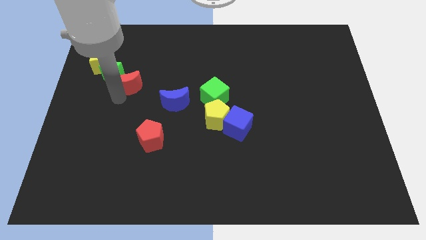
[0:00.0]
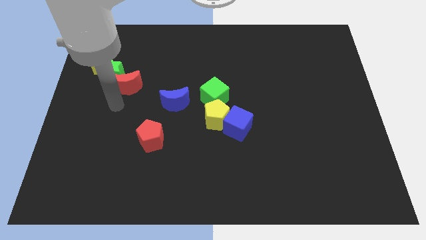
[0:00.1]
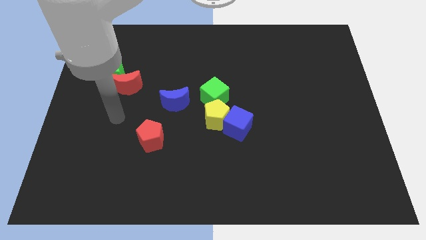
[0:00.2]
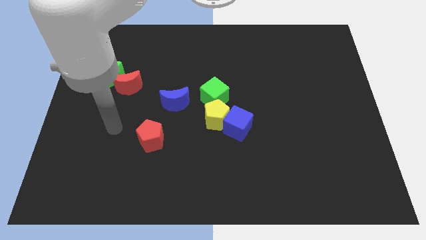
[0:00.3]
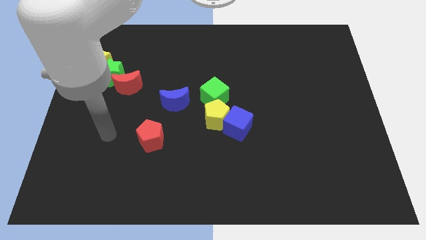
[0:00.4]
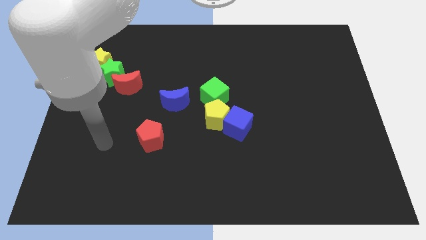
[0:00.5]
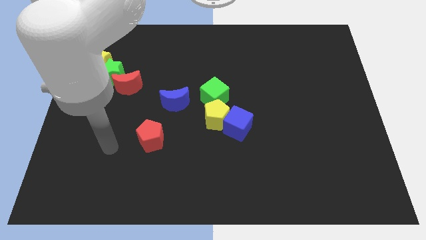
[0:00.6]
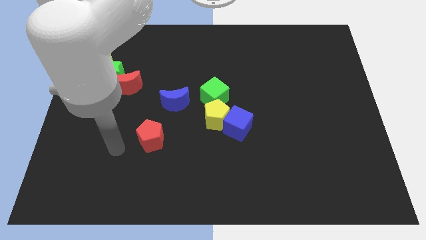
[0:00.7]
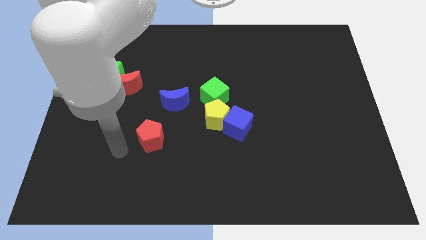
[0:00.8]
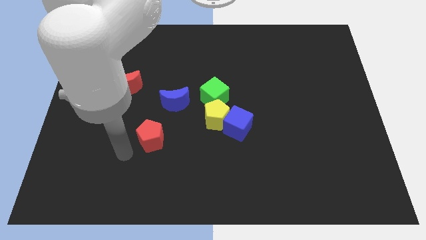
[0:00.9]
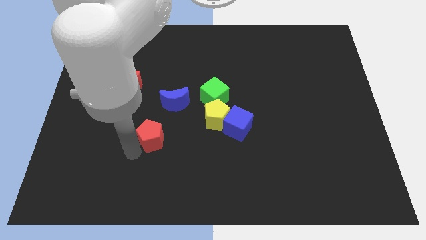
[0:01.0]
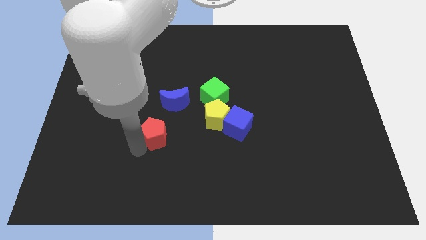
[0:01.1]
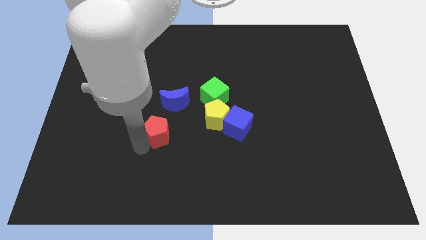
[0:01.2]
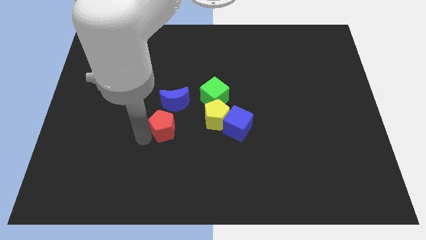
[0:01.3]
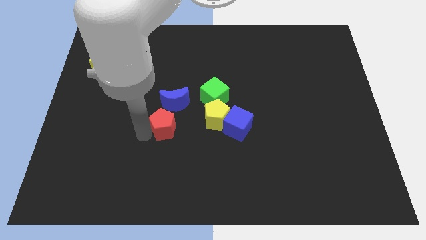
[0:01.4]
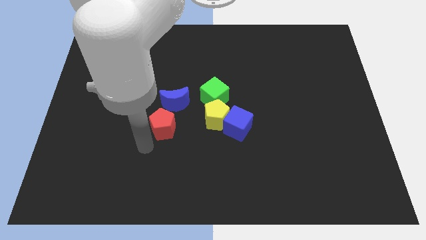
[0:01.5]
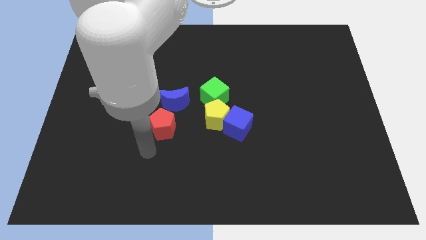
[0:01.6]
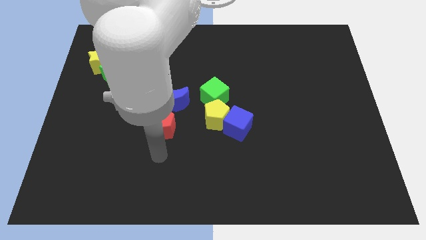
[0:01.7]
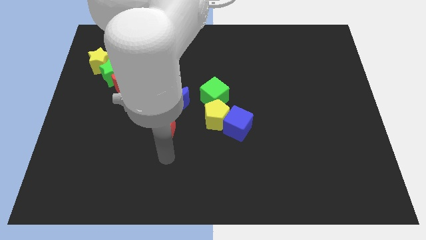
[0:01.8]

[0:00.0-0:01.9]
move red pentagon below blue moon

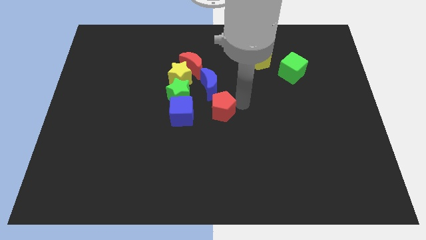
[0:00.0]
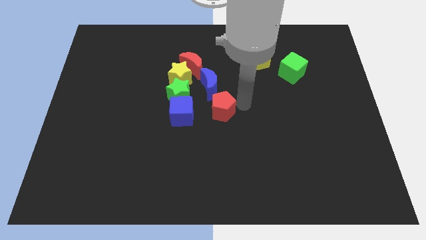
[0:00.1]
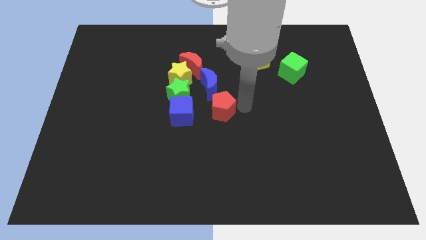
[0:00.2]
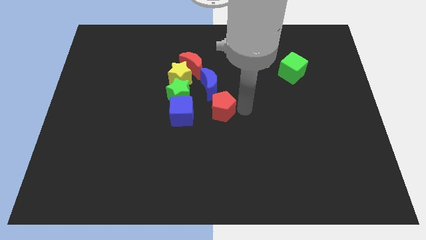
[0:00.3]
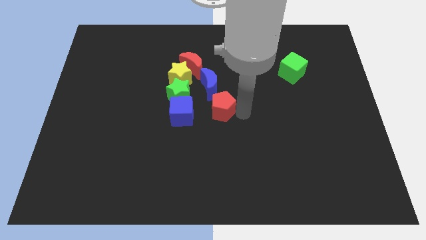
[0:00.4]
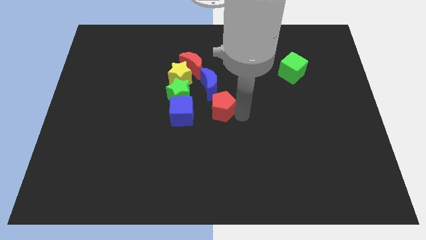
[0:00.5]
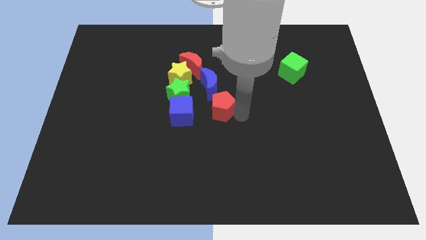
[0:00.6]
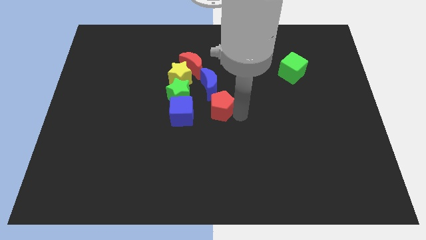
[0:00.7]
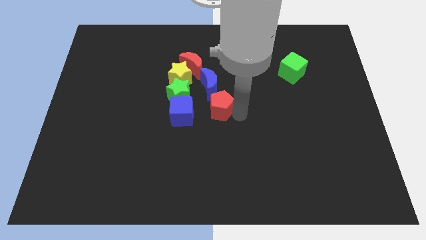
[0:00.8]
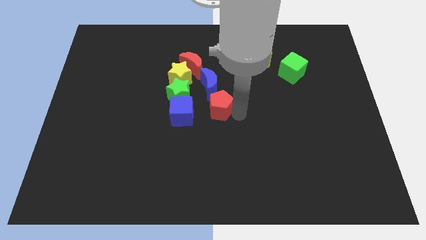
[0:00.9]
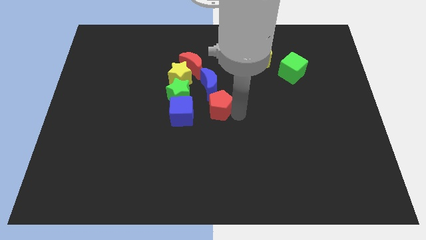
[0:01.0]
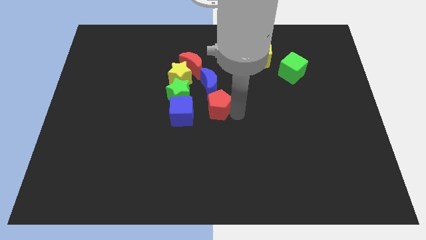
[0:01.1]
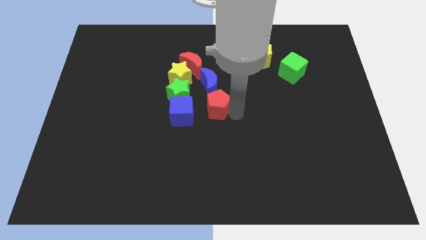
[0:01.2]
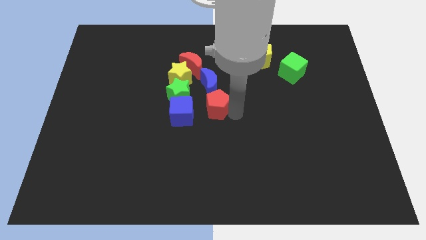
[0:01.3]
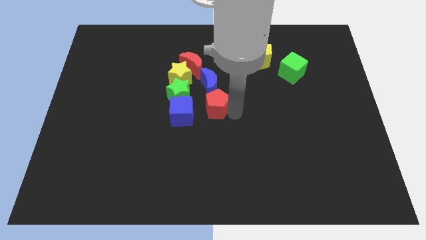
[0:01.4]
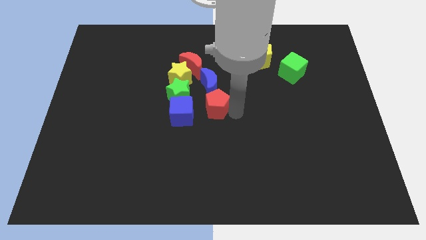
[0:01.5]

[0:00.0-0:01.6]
place the red pentagon below the blue crescent

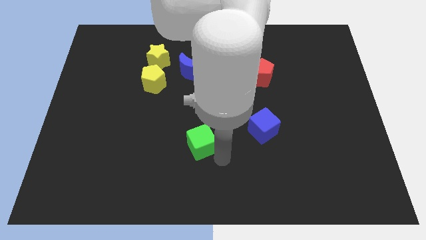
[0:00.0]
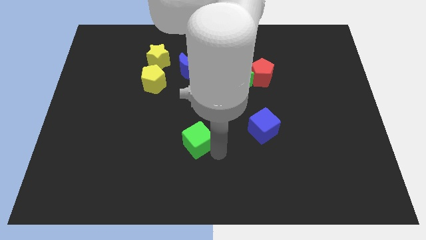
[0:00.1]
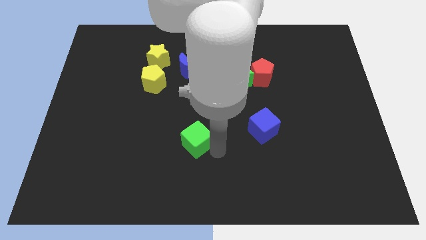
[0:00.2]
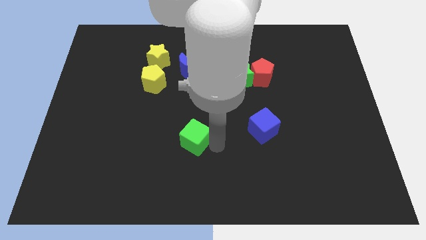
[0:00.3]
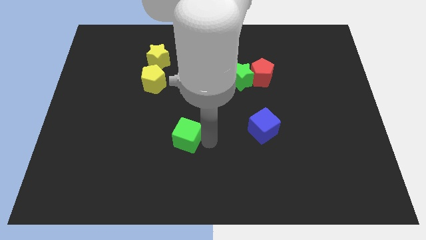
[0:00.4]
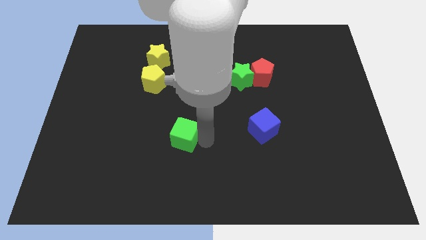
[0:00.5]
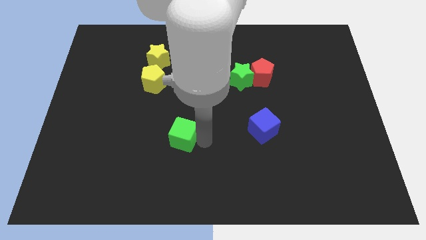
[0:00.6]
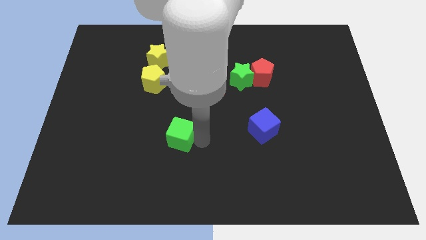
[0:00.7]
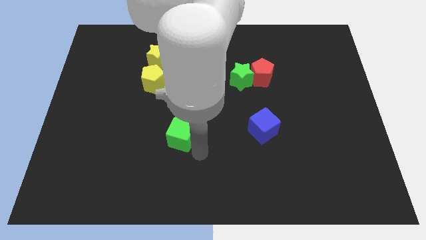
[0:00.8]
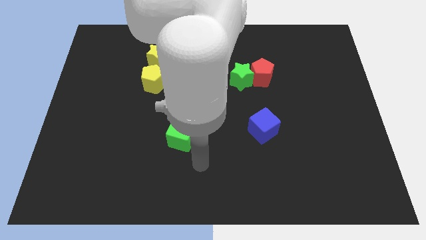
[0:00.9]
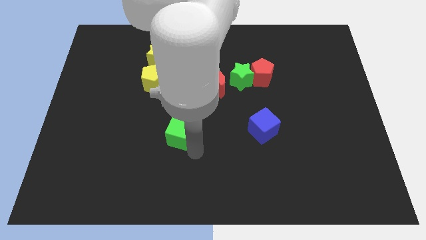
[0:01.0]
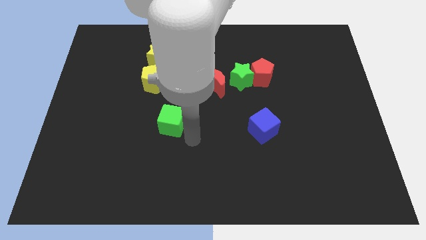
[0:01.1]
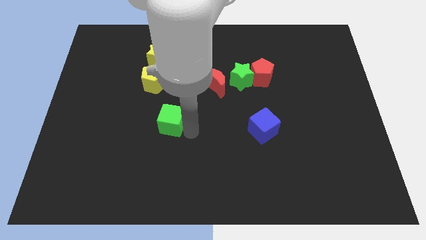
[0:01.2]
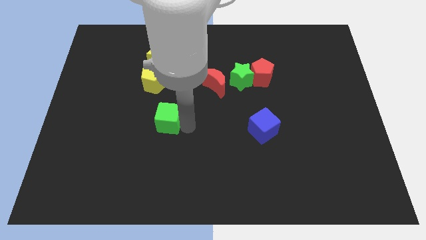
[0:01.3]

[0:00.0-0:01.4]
move green cube towards the yellow pentagon

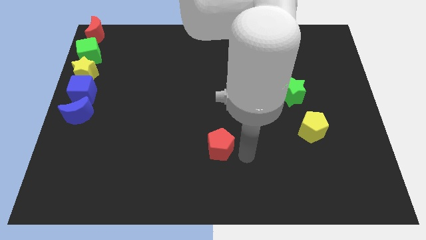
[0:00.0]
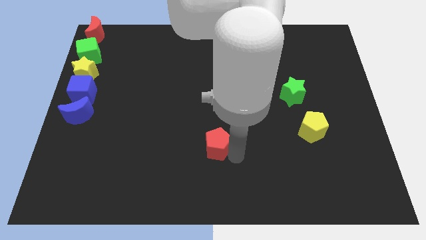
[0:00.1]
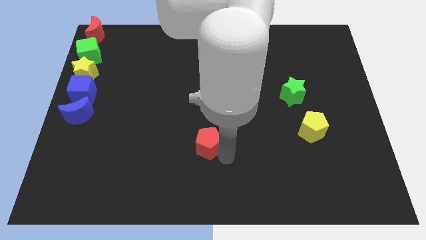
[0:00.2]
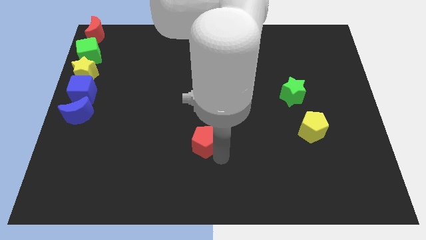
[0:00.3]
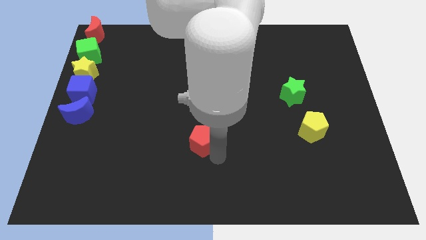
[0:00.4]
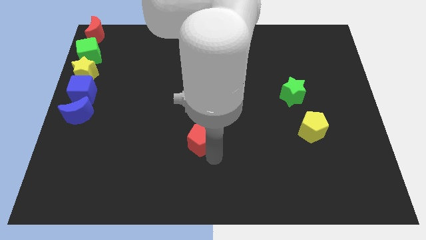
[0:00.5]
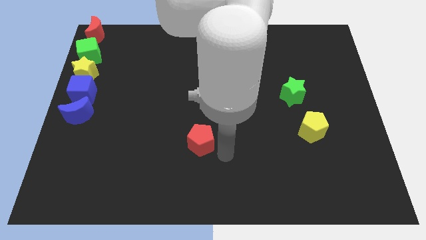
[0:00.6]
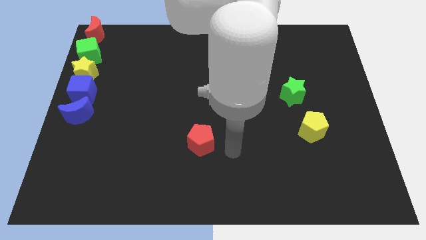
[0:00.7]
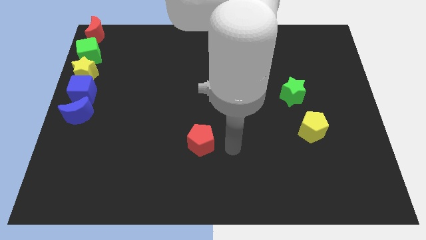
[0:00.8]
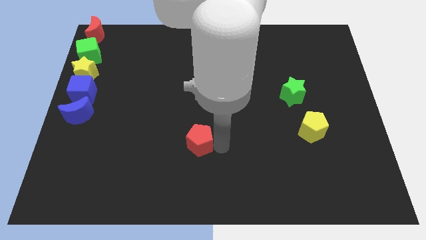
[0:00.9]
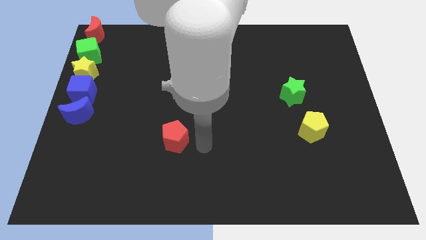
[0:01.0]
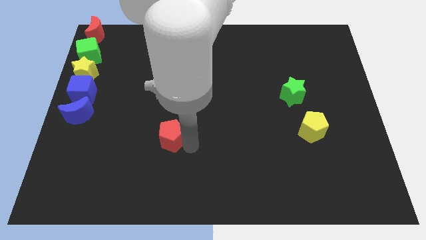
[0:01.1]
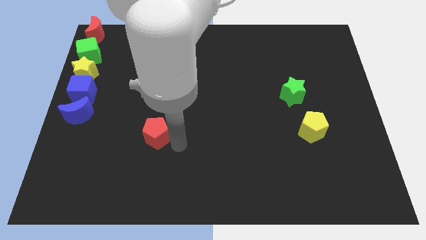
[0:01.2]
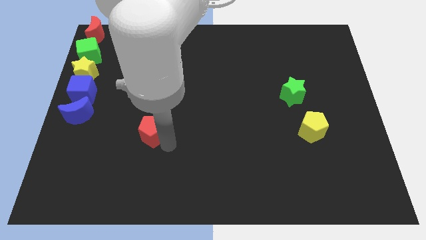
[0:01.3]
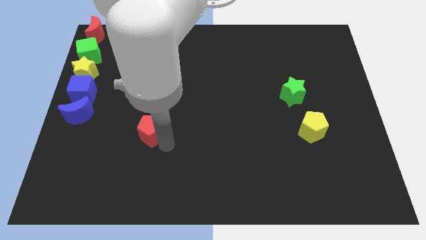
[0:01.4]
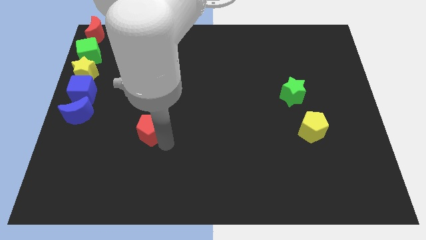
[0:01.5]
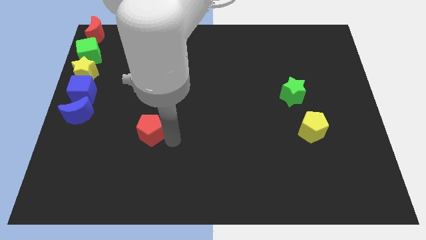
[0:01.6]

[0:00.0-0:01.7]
drag the red pentagon to the left

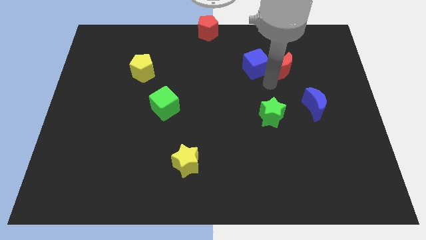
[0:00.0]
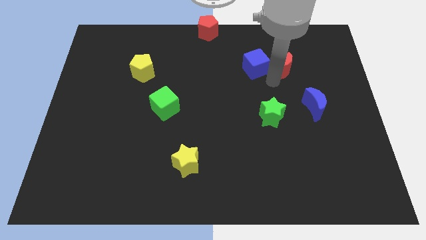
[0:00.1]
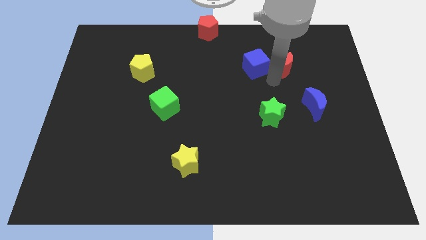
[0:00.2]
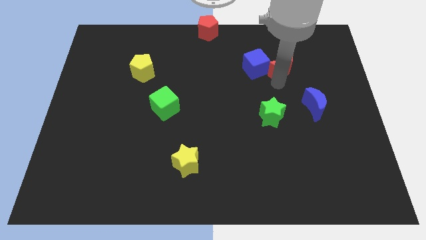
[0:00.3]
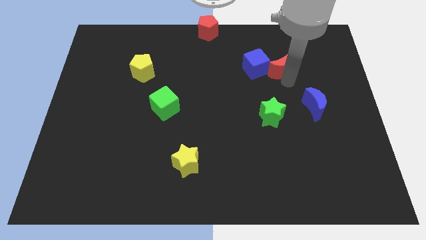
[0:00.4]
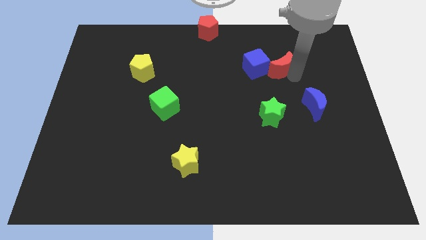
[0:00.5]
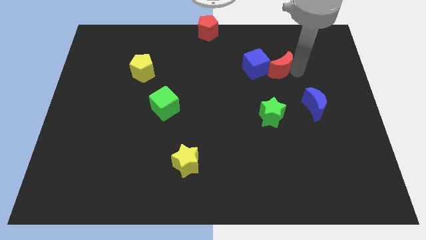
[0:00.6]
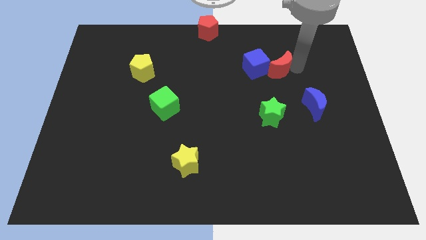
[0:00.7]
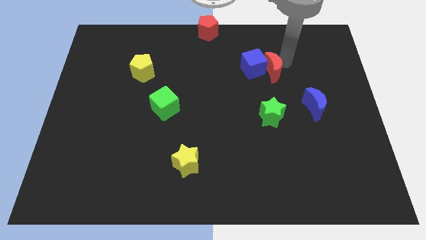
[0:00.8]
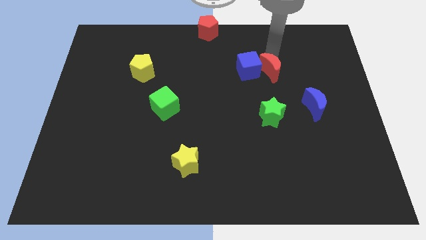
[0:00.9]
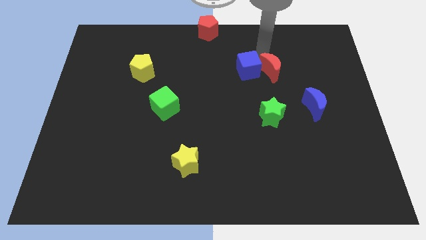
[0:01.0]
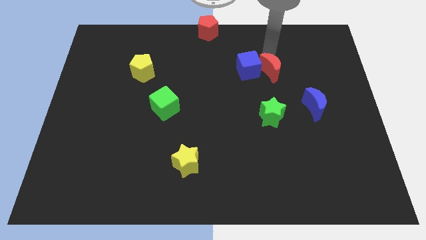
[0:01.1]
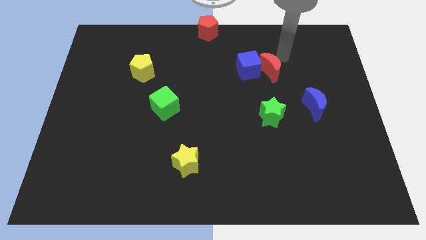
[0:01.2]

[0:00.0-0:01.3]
move the red moon close to the blue cube

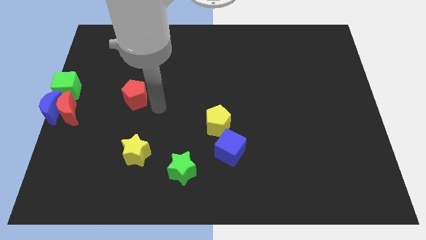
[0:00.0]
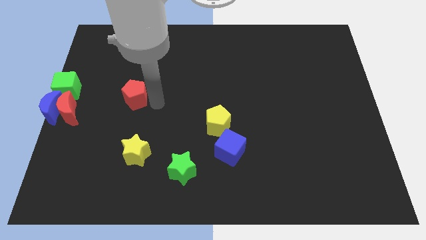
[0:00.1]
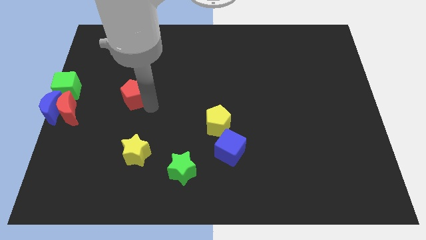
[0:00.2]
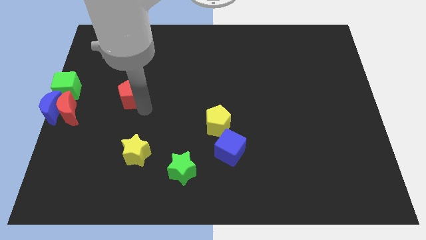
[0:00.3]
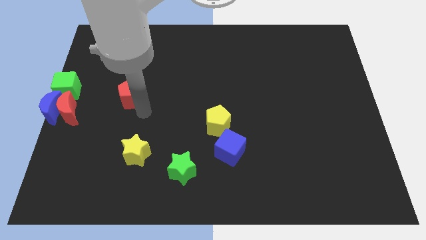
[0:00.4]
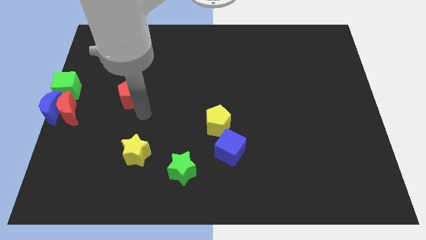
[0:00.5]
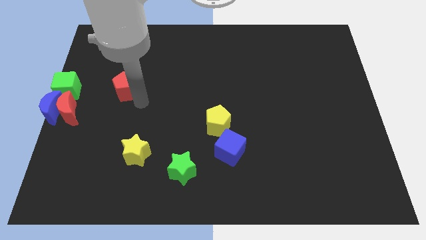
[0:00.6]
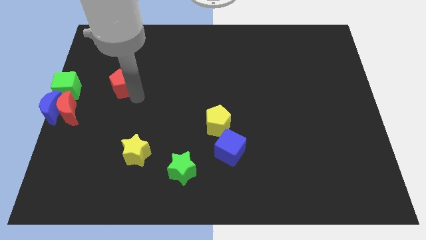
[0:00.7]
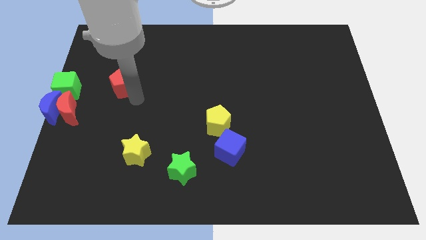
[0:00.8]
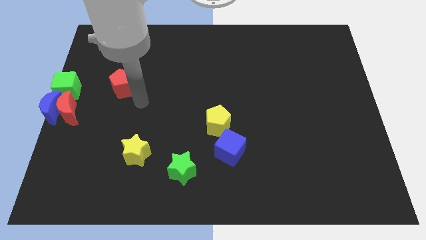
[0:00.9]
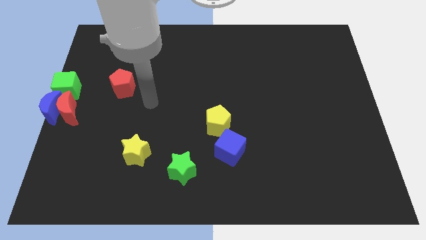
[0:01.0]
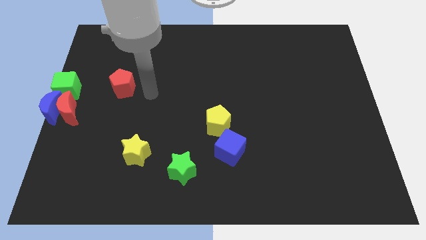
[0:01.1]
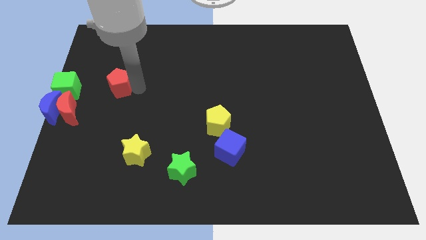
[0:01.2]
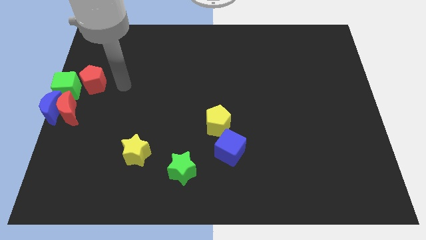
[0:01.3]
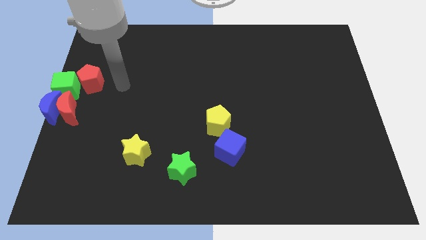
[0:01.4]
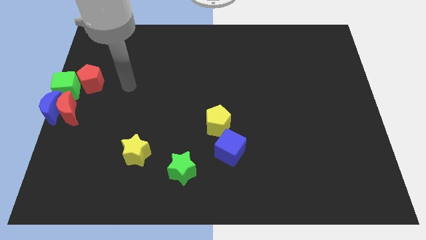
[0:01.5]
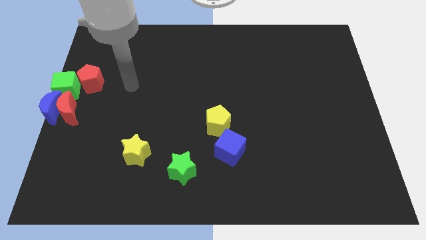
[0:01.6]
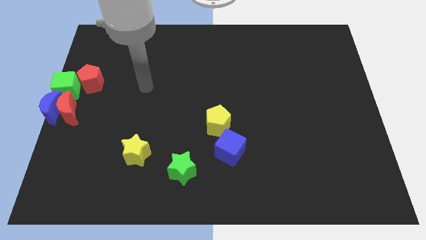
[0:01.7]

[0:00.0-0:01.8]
place the red pentagon into the green cube
